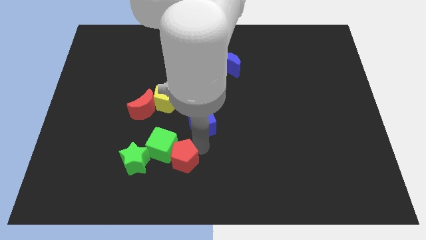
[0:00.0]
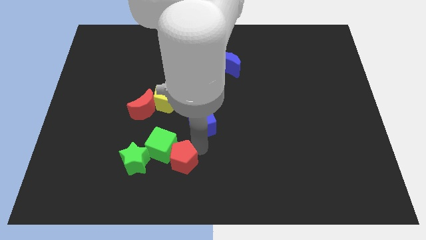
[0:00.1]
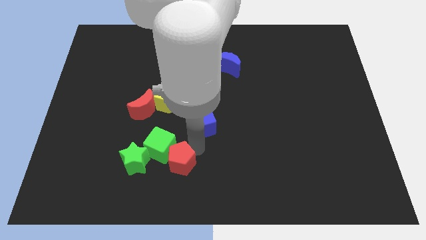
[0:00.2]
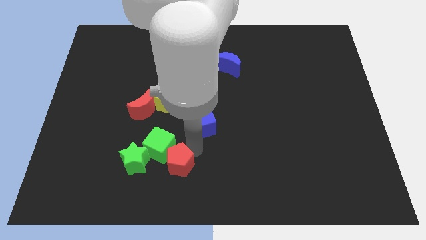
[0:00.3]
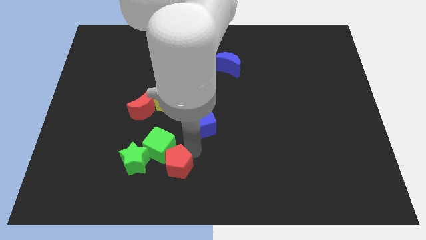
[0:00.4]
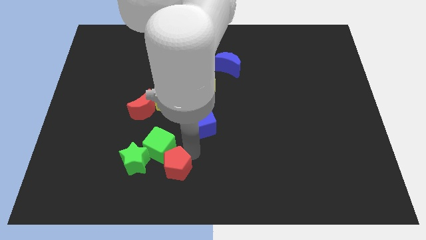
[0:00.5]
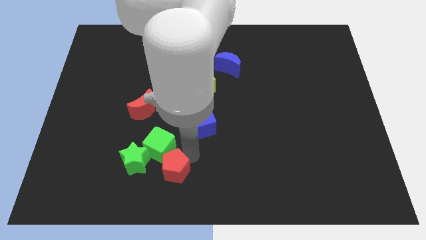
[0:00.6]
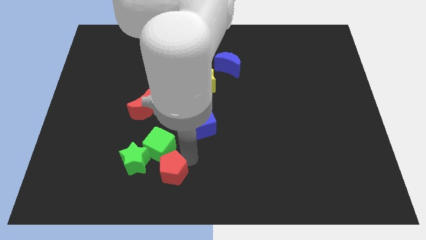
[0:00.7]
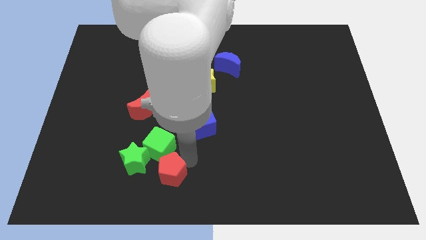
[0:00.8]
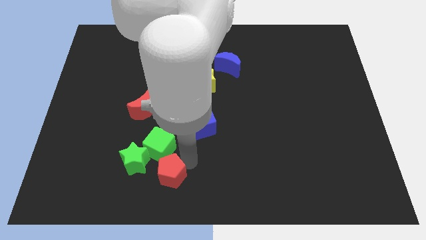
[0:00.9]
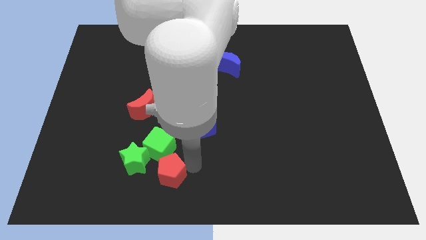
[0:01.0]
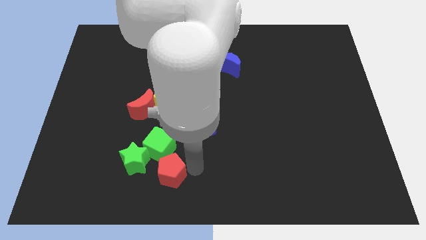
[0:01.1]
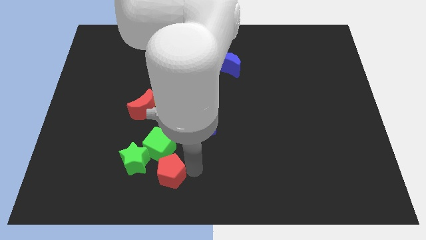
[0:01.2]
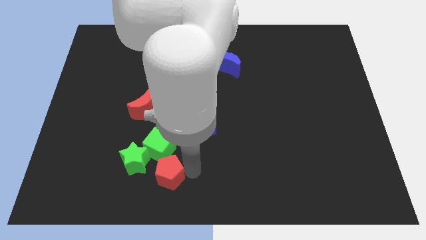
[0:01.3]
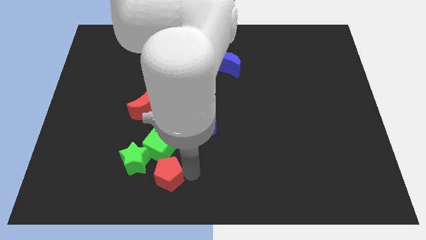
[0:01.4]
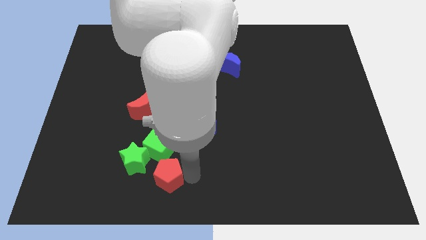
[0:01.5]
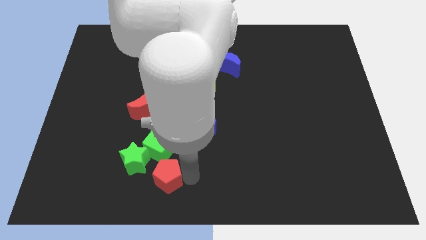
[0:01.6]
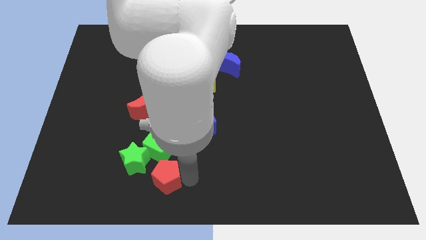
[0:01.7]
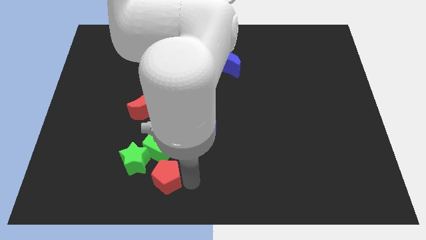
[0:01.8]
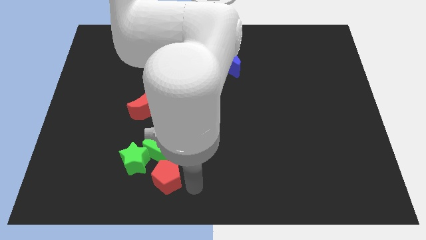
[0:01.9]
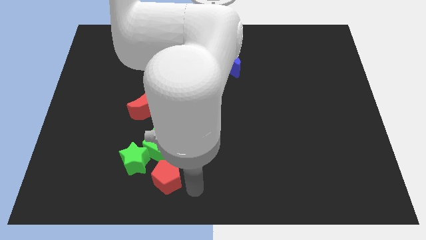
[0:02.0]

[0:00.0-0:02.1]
slide the red pentagon to the bottom side

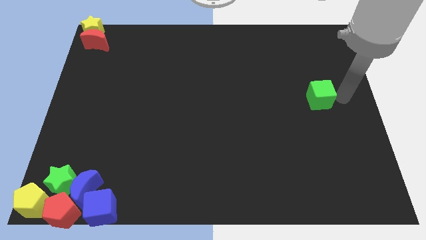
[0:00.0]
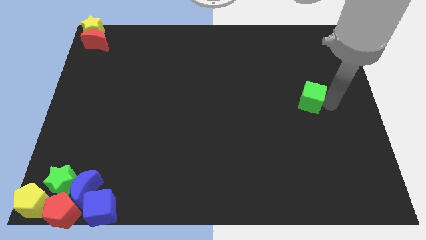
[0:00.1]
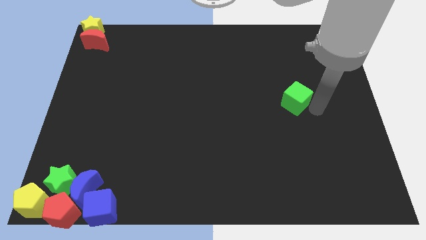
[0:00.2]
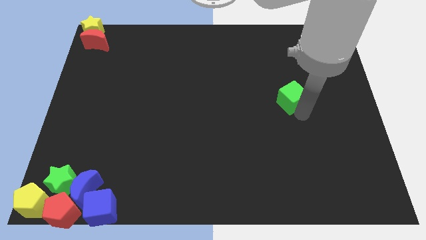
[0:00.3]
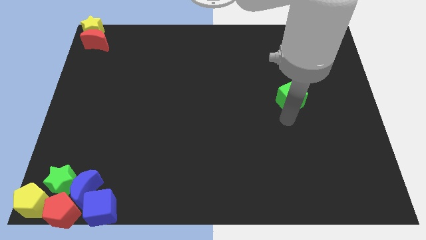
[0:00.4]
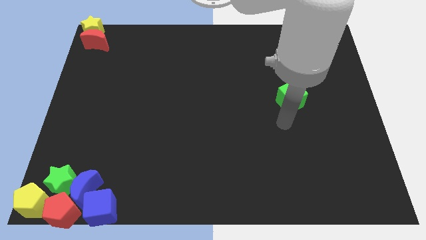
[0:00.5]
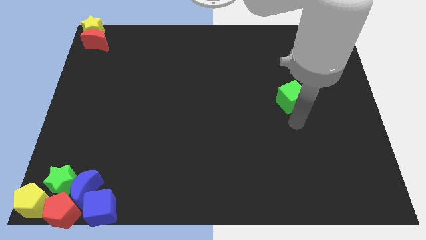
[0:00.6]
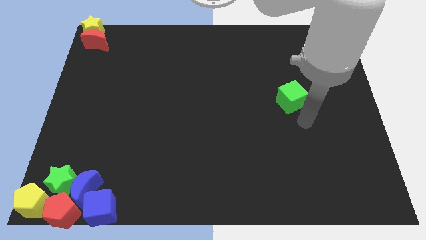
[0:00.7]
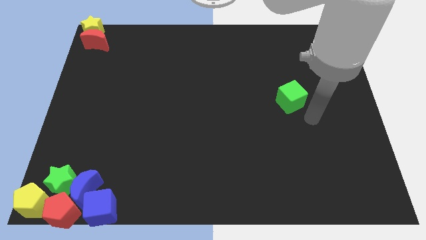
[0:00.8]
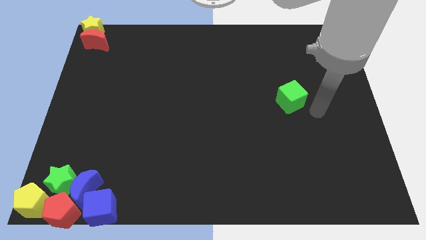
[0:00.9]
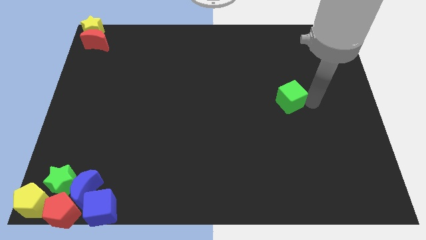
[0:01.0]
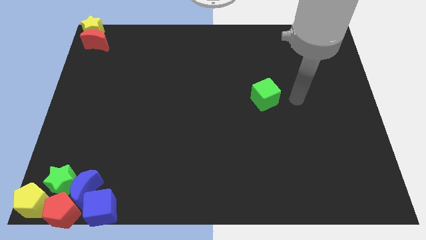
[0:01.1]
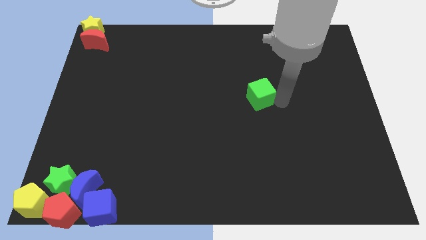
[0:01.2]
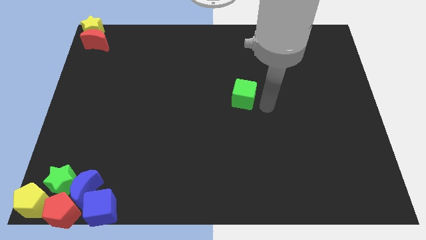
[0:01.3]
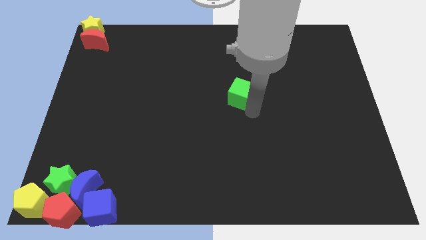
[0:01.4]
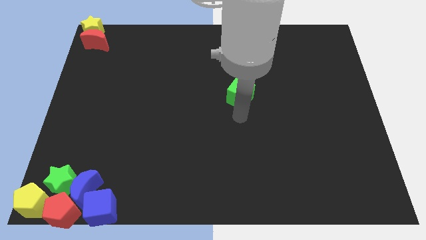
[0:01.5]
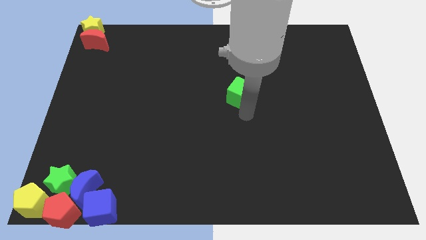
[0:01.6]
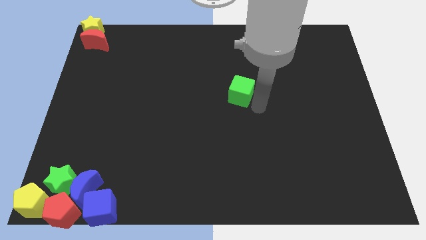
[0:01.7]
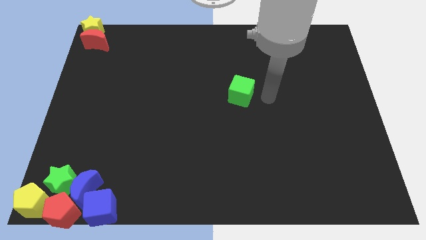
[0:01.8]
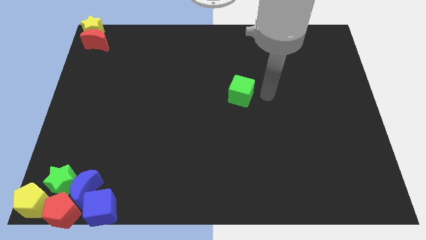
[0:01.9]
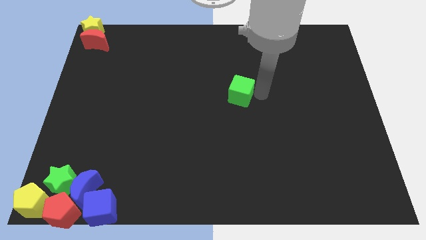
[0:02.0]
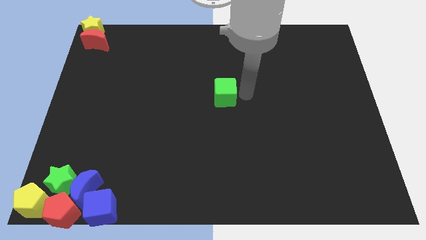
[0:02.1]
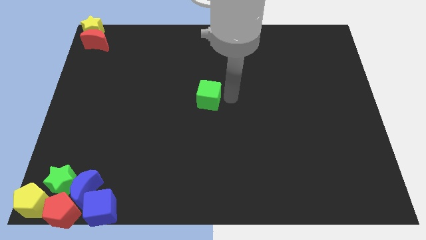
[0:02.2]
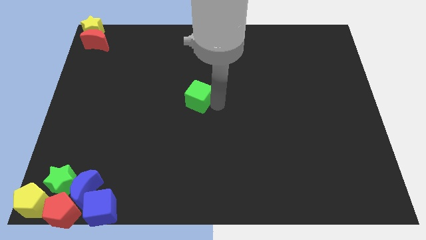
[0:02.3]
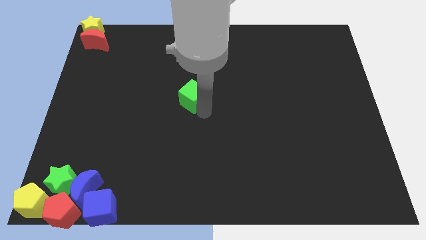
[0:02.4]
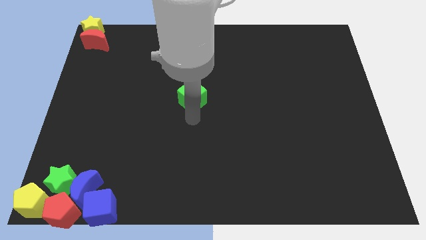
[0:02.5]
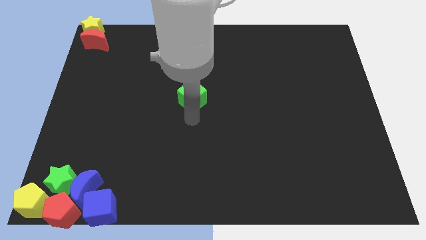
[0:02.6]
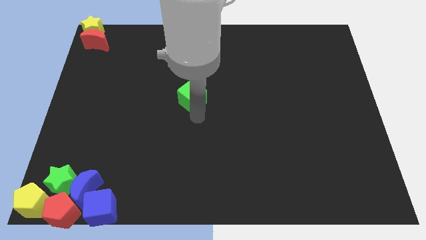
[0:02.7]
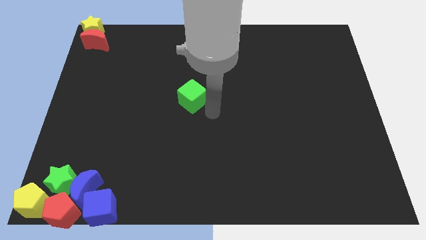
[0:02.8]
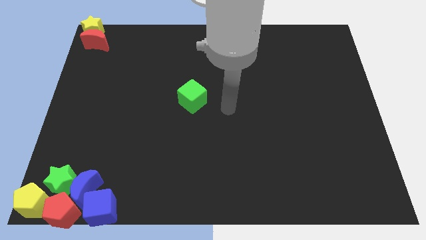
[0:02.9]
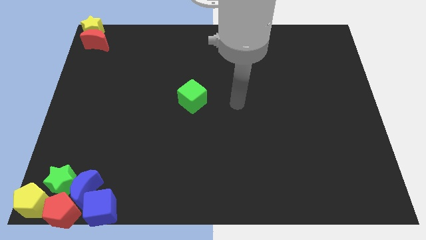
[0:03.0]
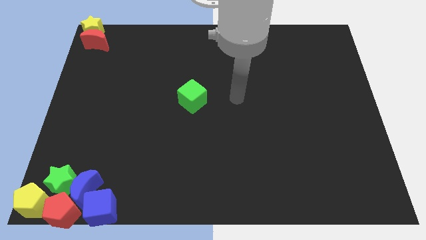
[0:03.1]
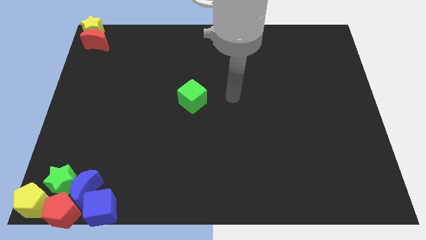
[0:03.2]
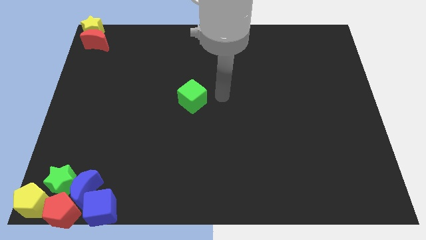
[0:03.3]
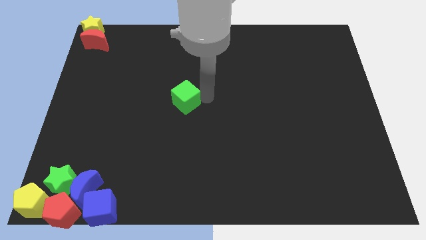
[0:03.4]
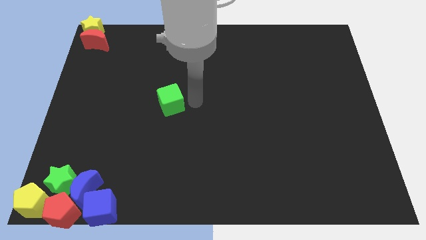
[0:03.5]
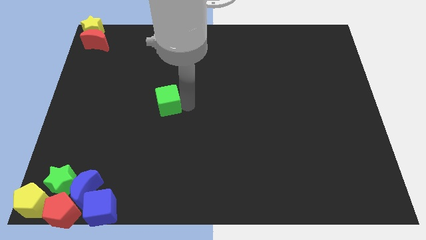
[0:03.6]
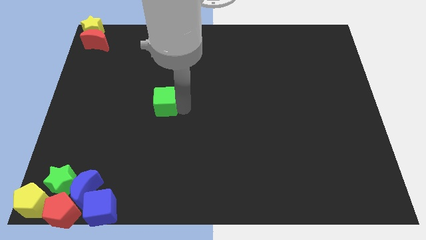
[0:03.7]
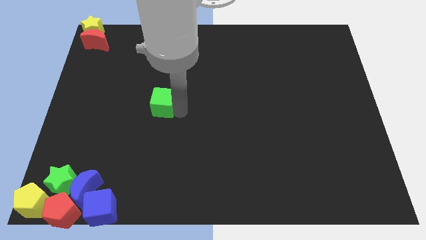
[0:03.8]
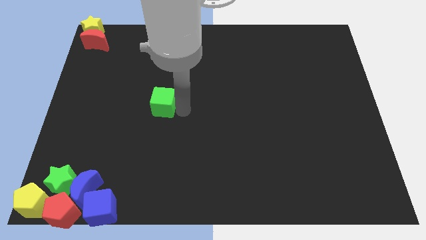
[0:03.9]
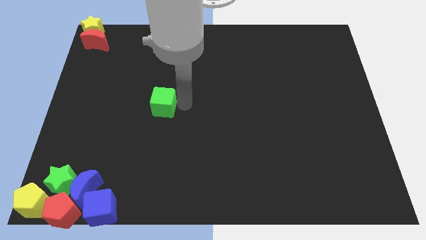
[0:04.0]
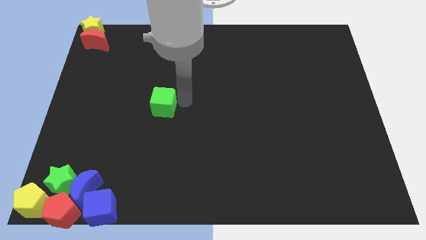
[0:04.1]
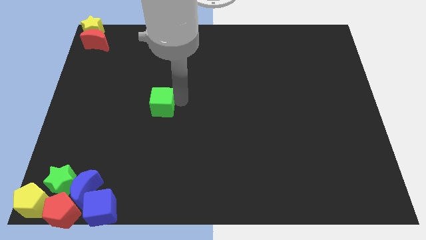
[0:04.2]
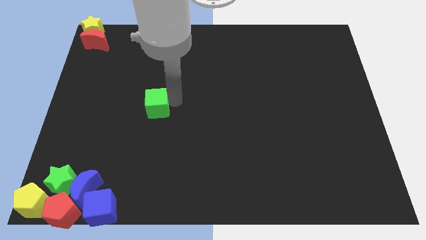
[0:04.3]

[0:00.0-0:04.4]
push the green cube towards left side of the board

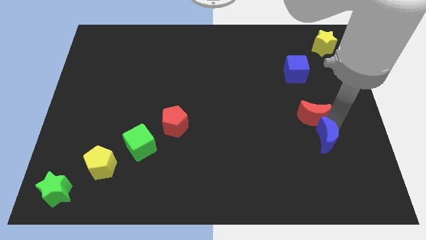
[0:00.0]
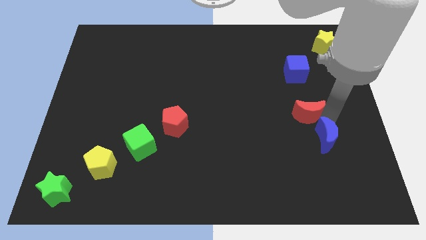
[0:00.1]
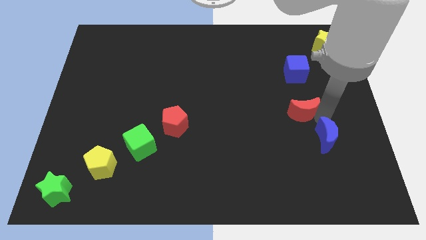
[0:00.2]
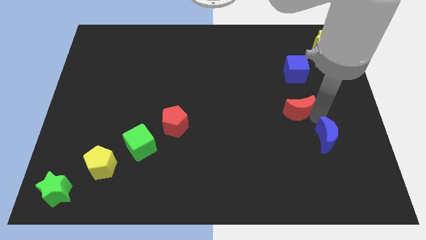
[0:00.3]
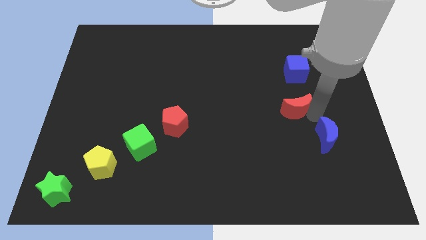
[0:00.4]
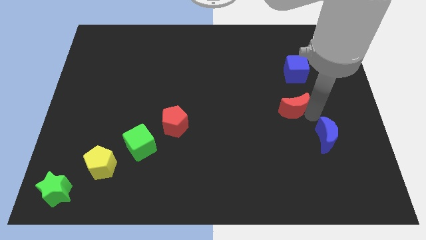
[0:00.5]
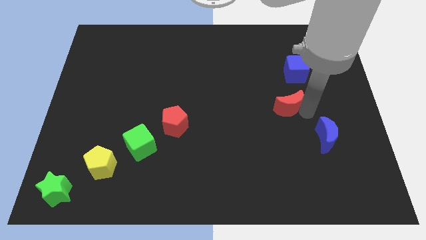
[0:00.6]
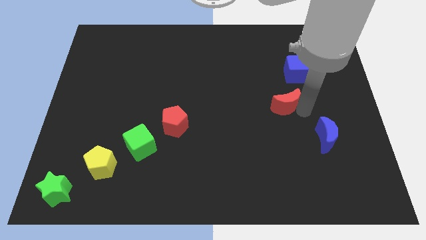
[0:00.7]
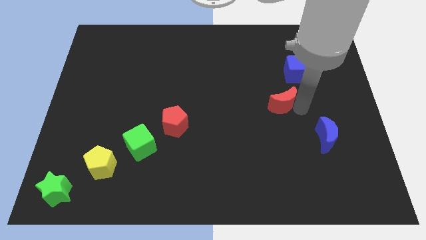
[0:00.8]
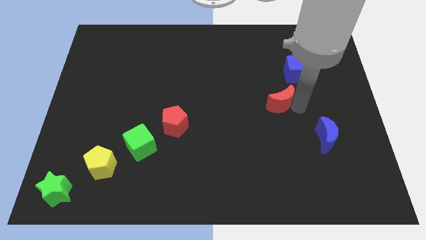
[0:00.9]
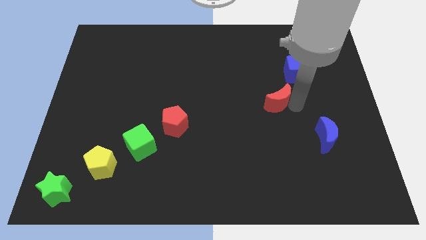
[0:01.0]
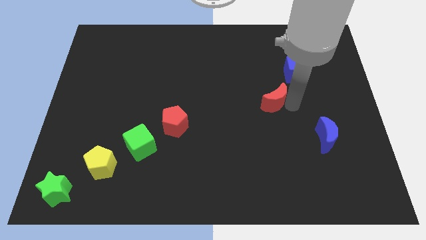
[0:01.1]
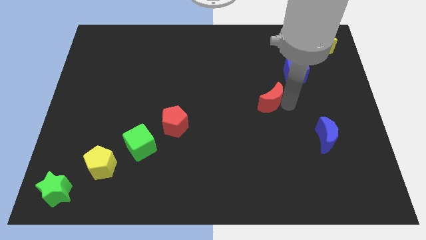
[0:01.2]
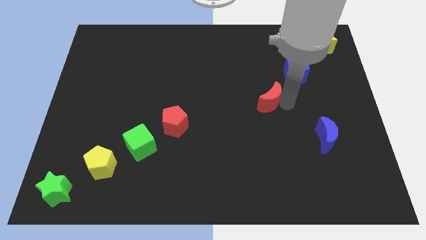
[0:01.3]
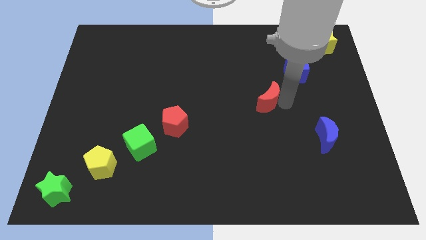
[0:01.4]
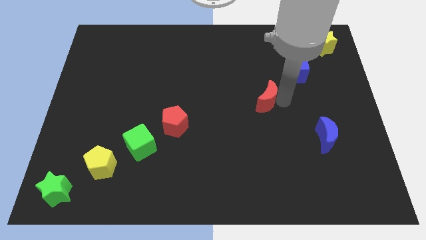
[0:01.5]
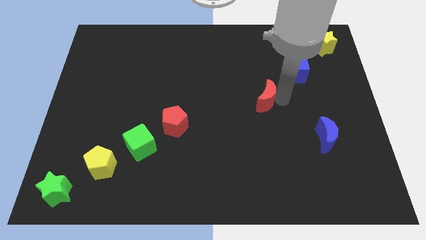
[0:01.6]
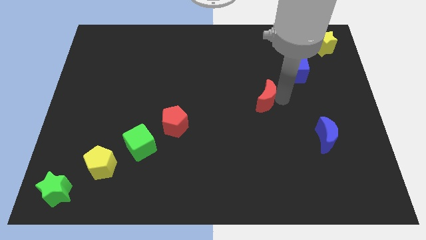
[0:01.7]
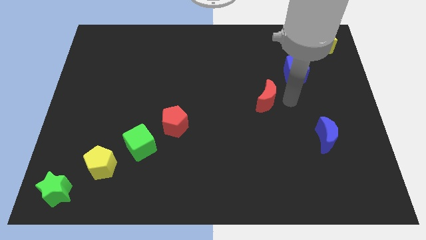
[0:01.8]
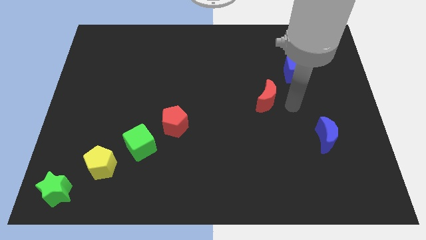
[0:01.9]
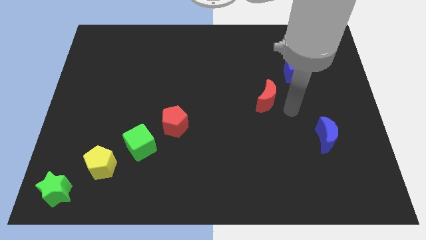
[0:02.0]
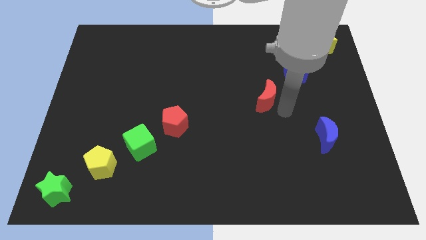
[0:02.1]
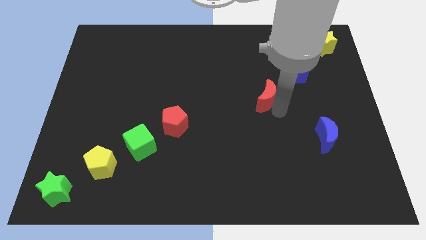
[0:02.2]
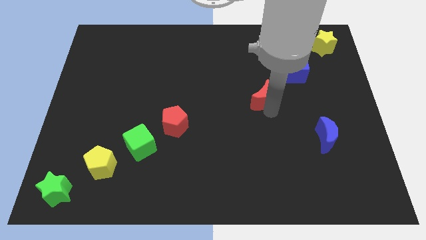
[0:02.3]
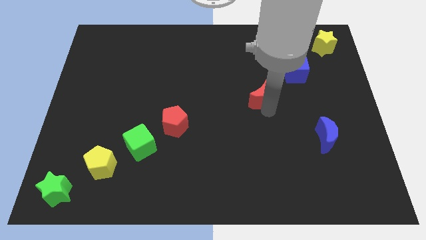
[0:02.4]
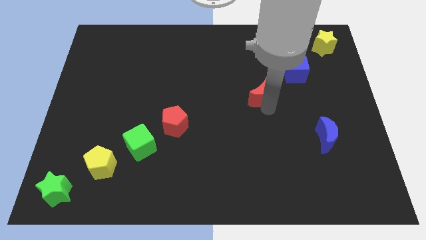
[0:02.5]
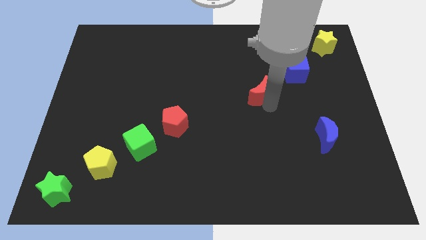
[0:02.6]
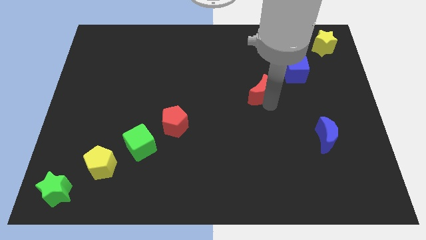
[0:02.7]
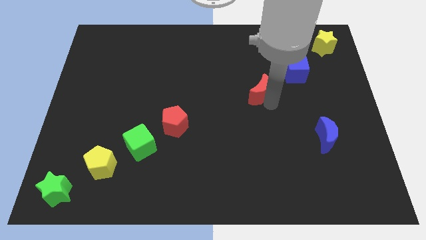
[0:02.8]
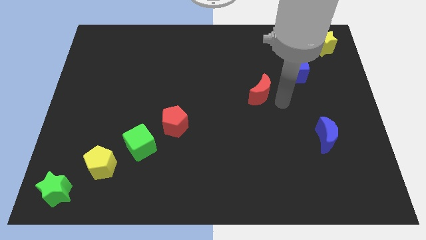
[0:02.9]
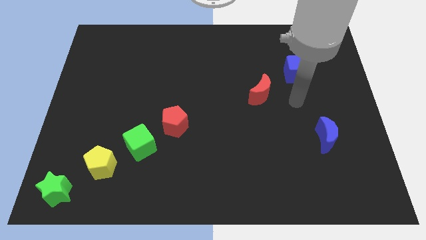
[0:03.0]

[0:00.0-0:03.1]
place the red crescent in between the blue cube and red pentagon
